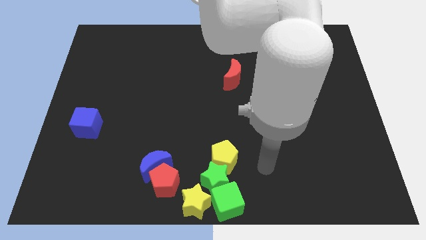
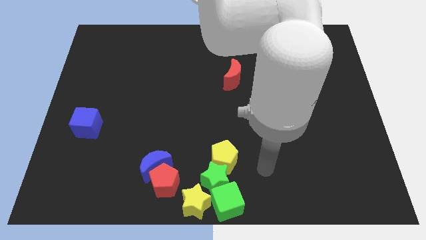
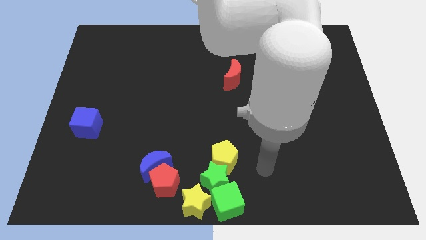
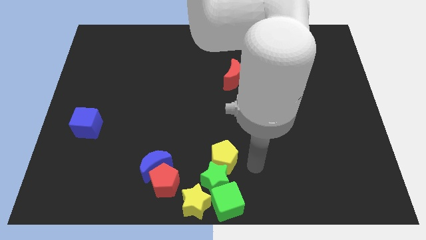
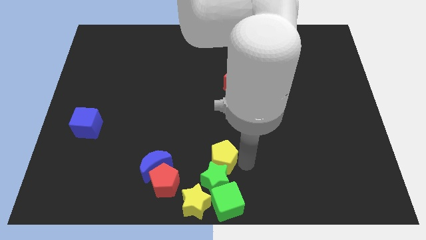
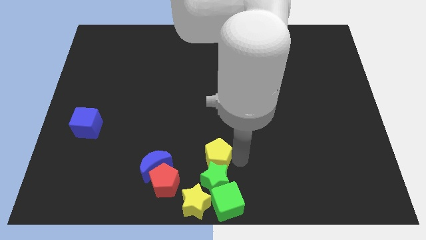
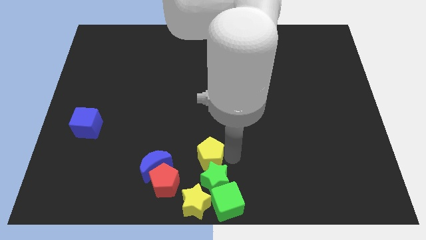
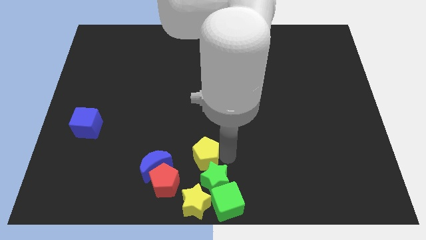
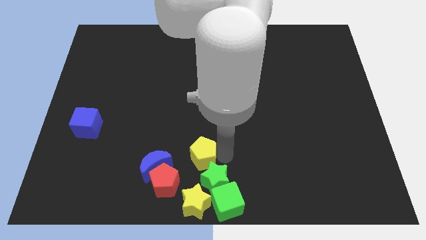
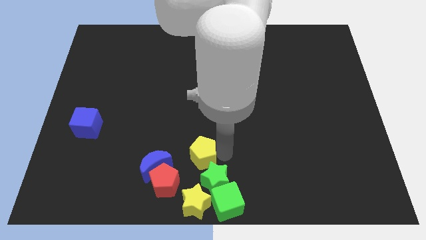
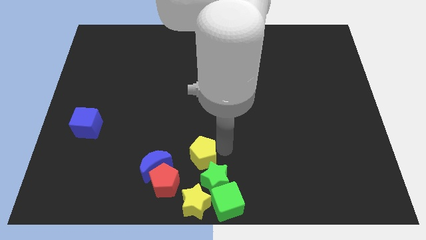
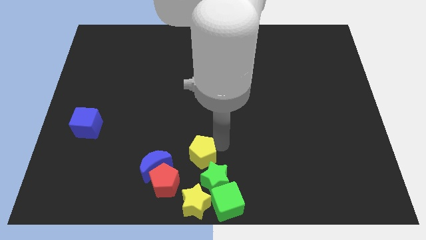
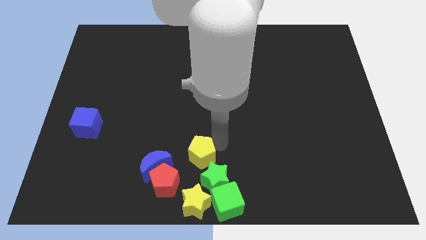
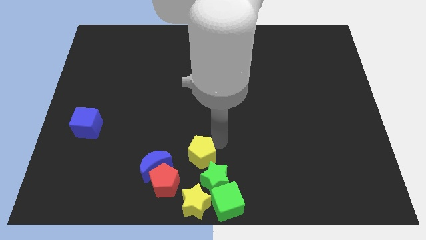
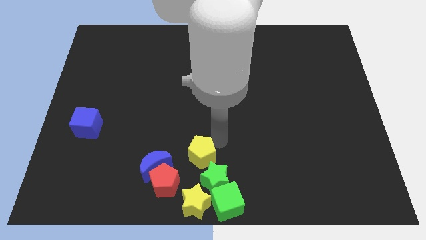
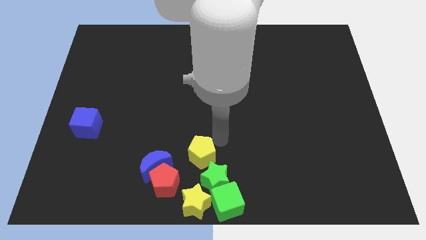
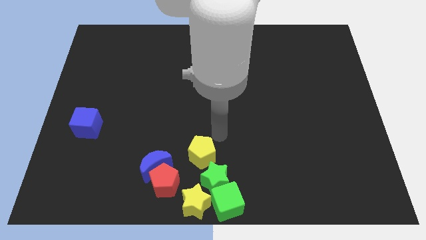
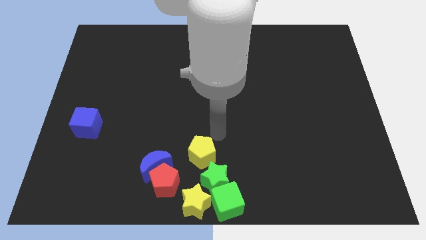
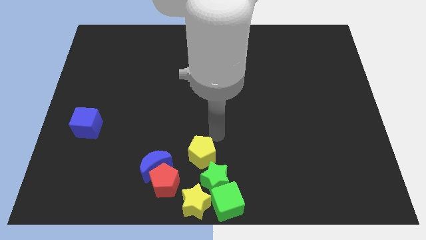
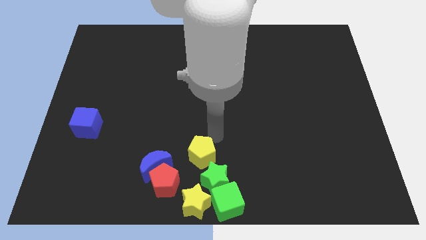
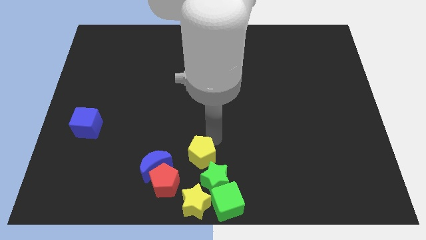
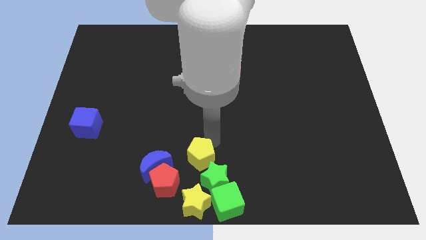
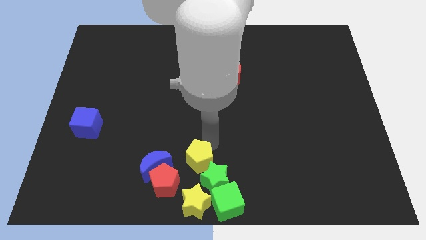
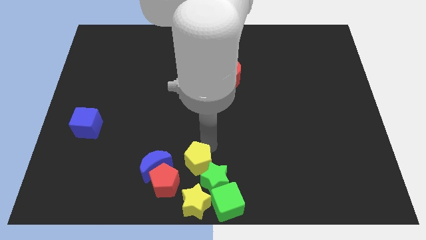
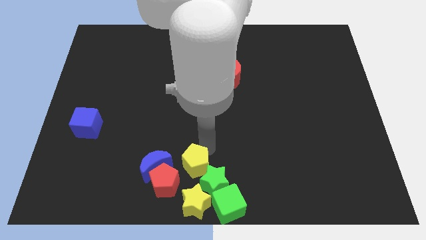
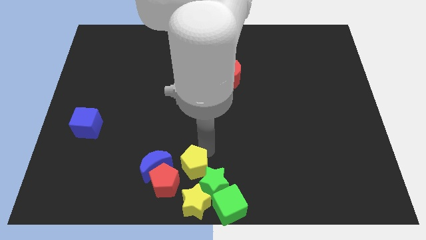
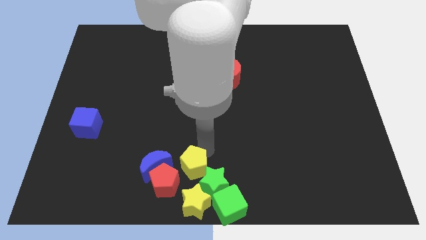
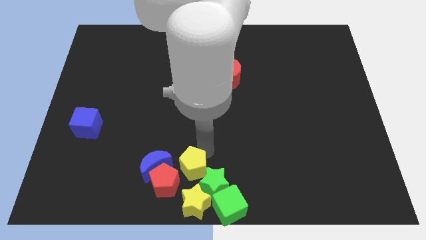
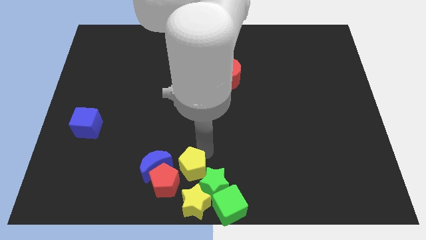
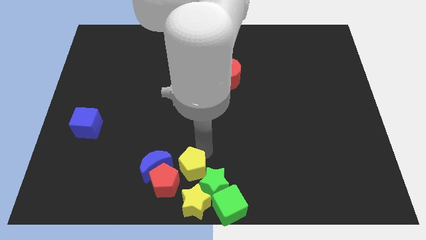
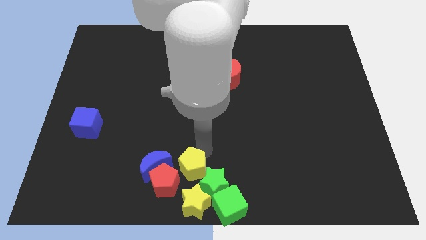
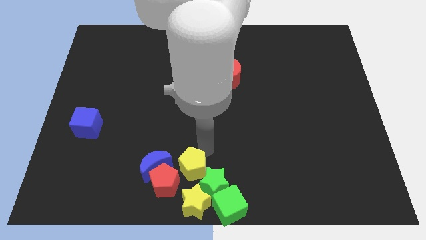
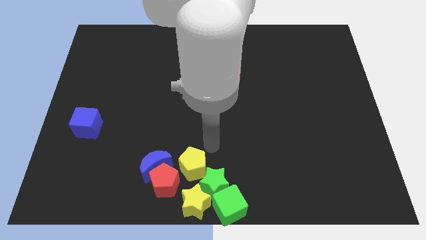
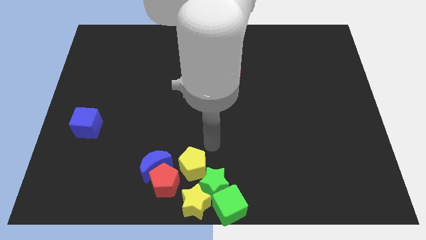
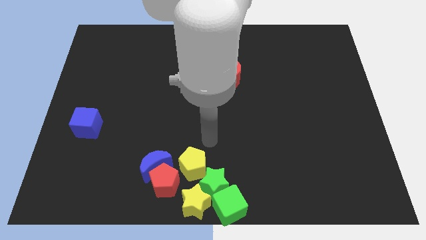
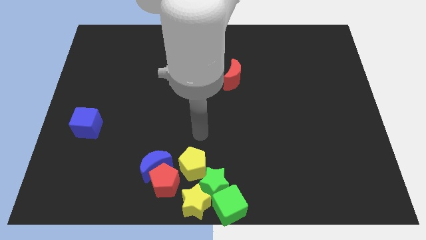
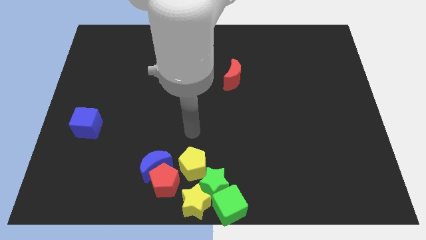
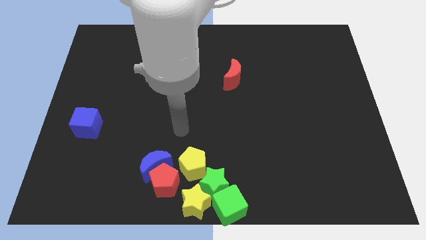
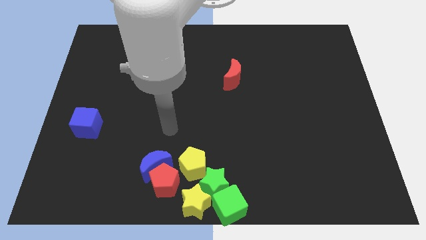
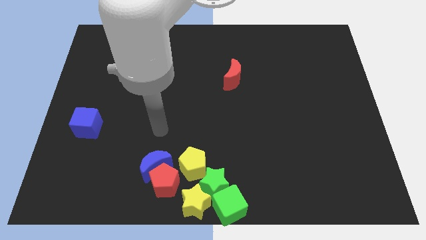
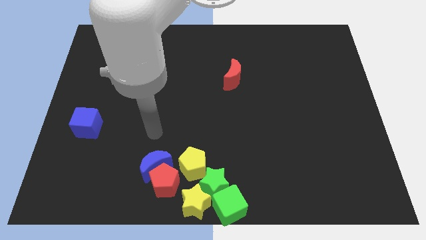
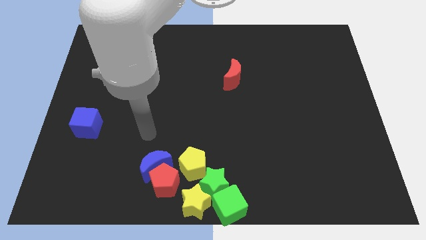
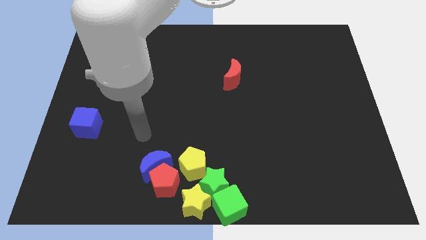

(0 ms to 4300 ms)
slightly drag the yellow pentagon beside the blue crescent

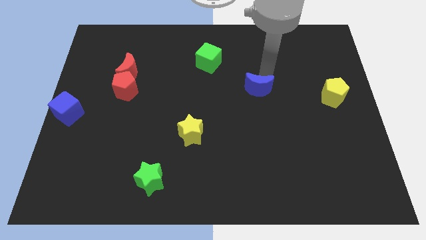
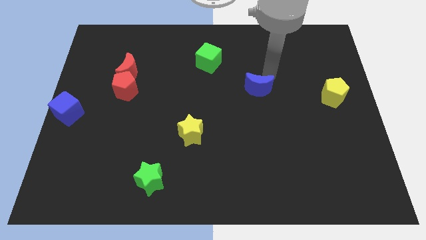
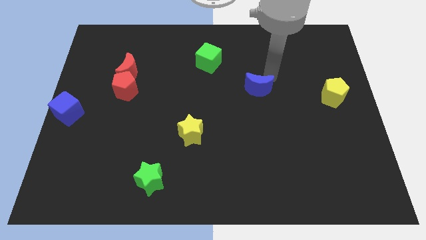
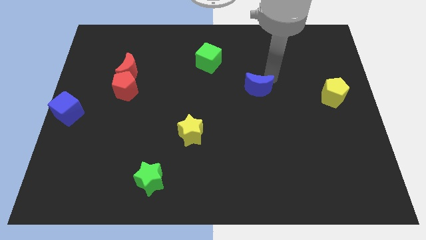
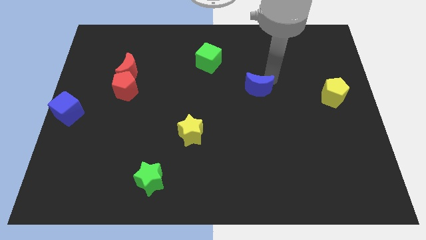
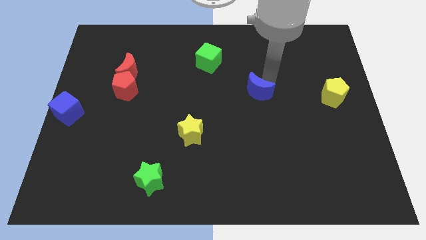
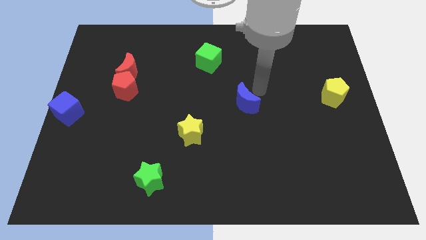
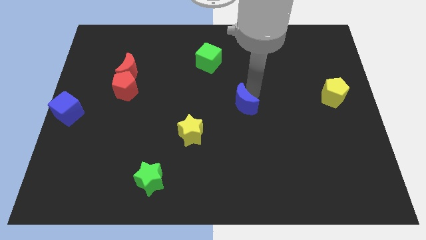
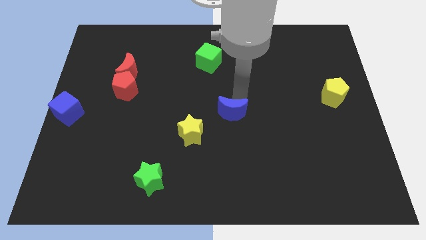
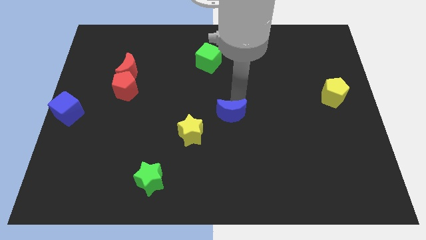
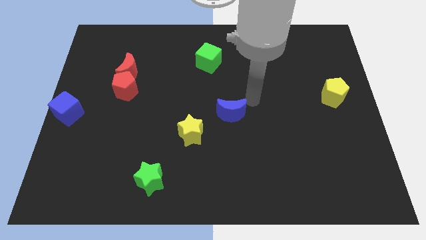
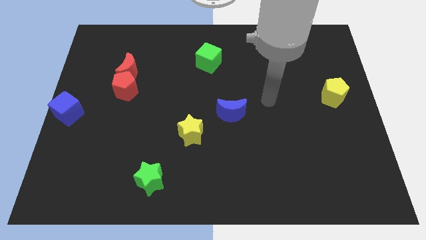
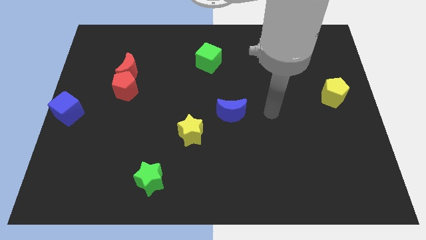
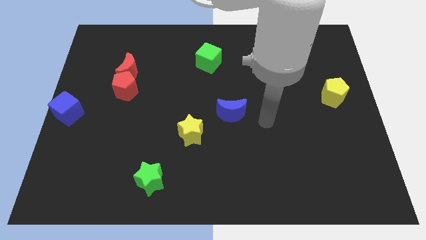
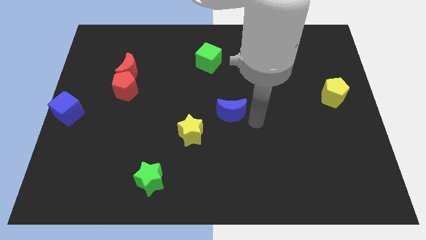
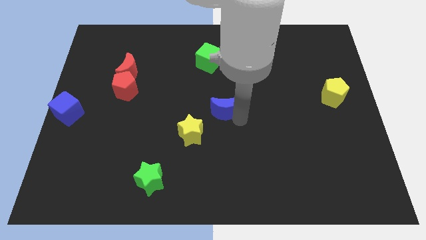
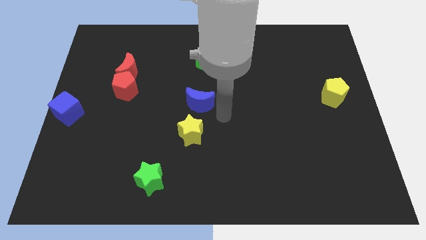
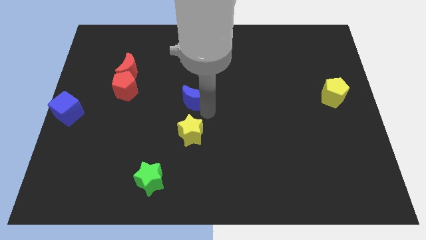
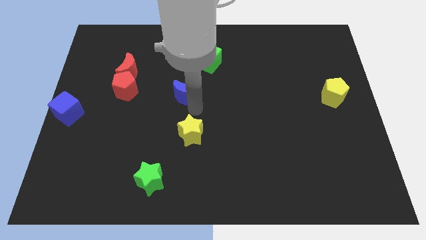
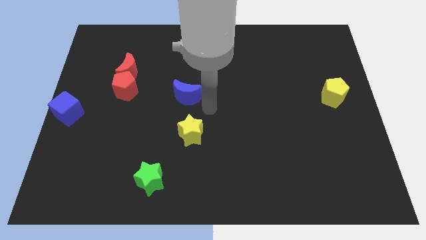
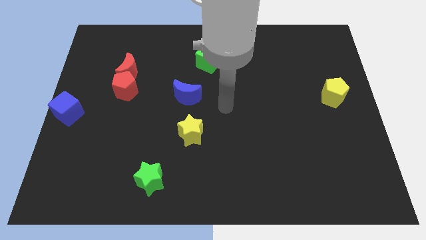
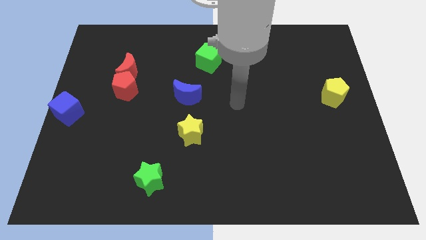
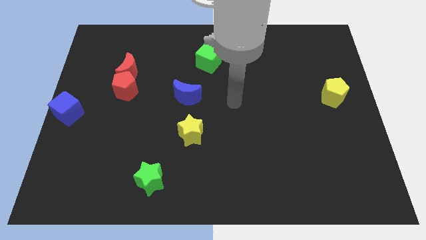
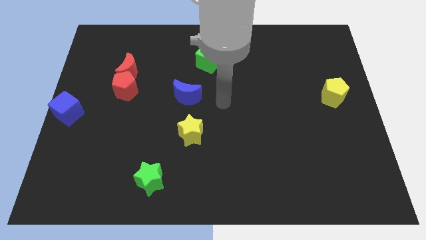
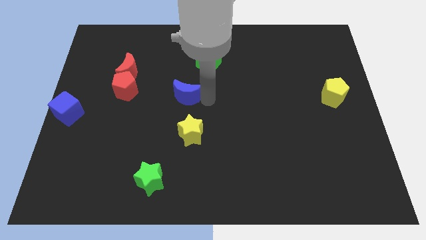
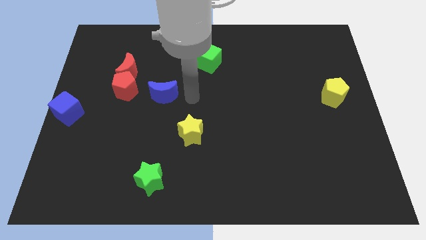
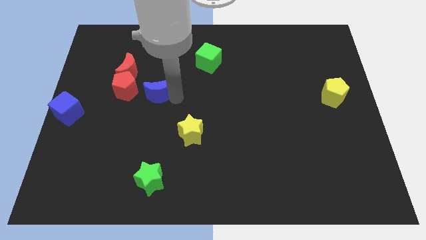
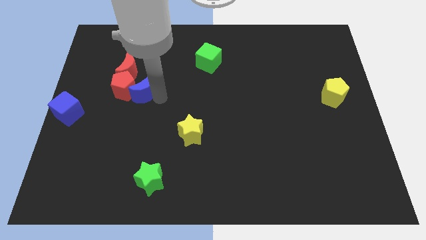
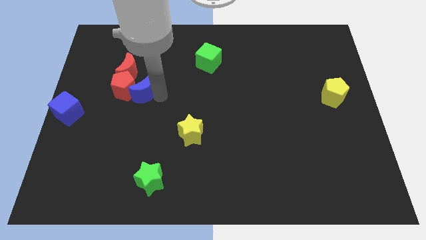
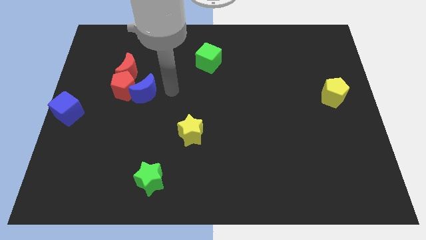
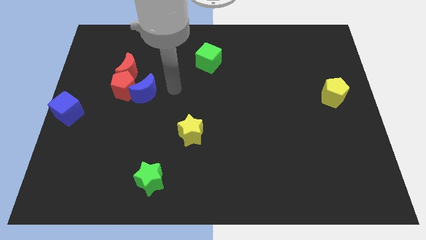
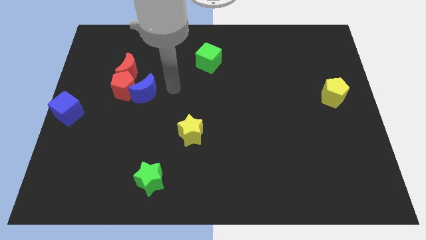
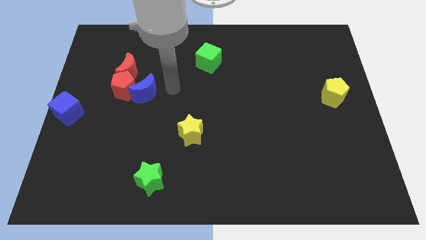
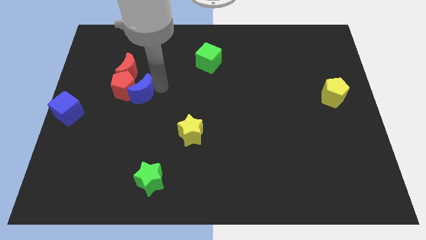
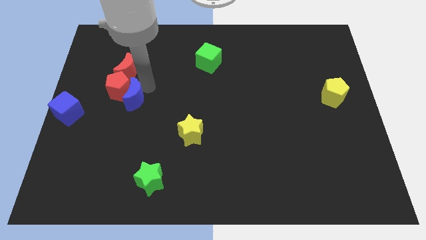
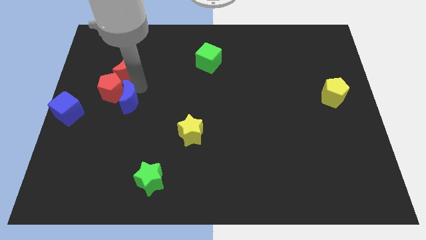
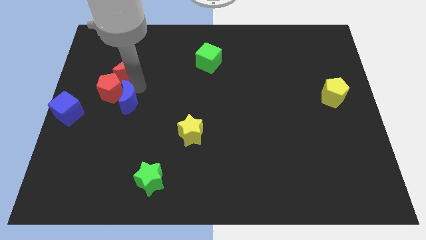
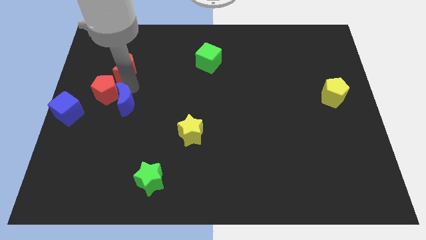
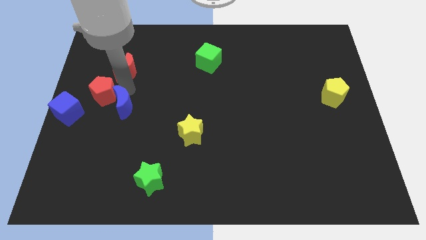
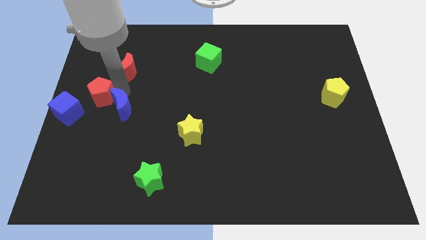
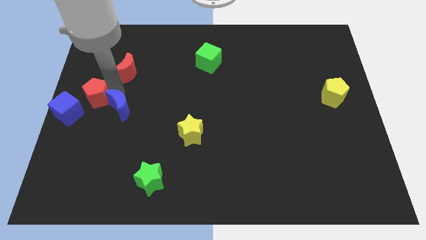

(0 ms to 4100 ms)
add blue moon into red pentagon

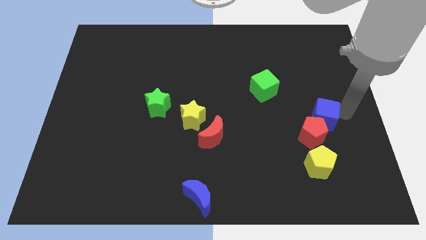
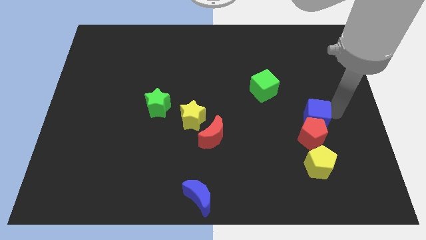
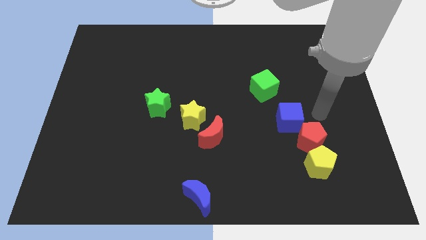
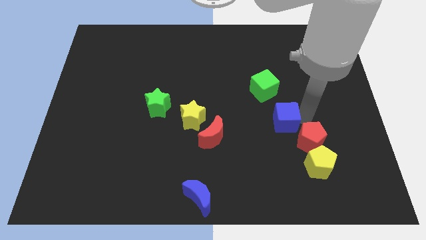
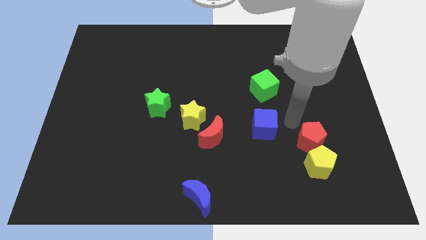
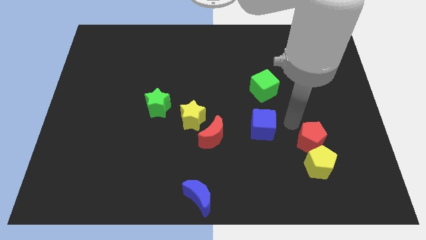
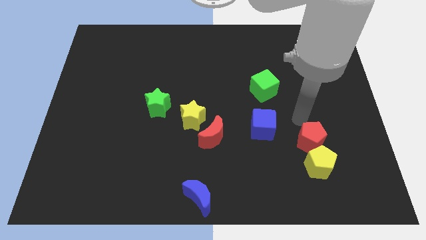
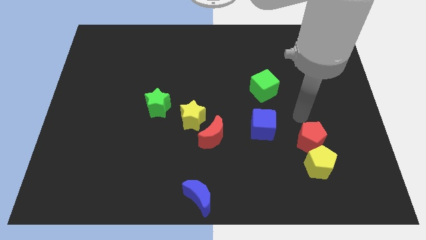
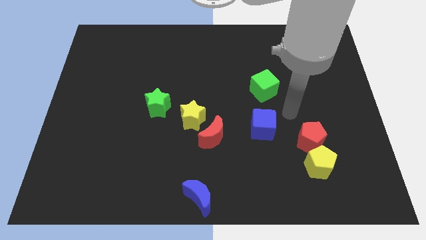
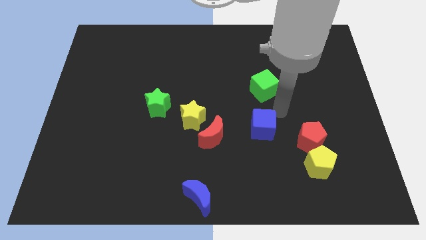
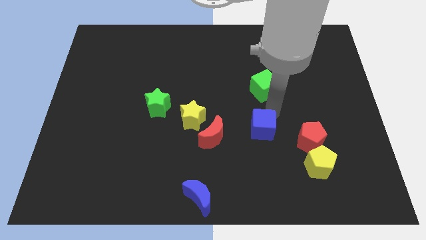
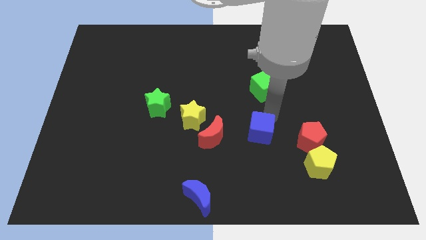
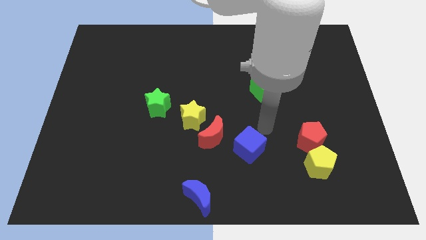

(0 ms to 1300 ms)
place the blue cube in between the red pentagon and red moon
